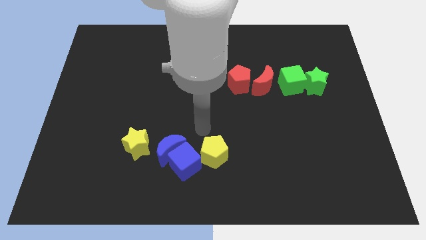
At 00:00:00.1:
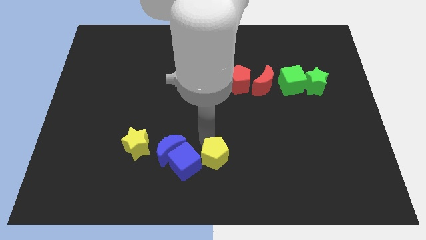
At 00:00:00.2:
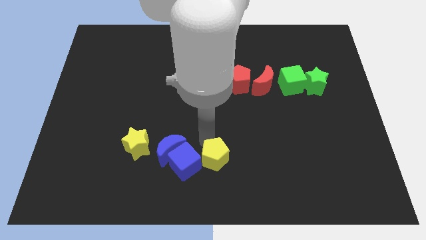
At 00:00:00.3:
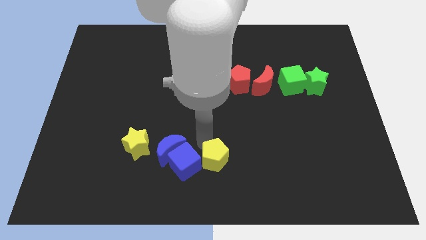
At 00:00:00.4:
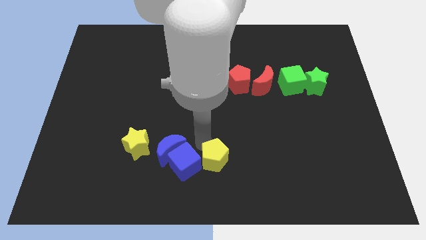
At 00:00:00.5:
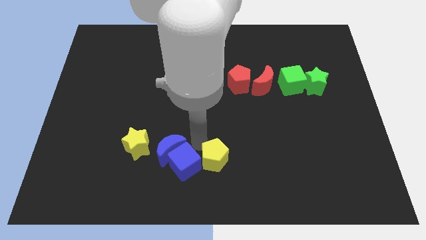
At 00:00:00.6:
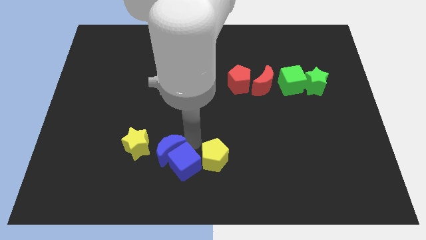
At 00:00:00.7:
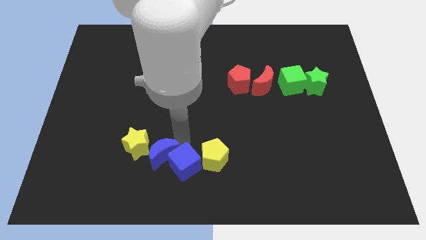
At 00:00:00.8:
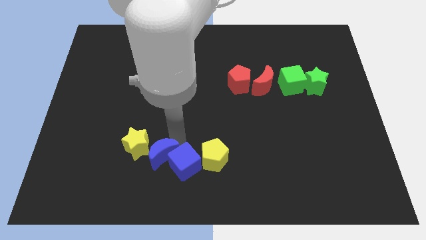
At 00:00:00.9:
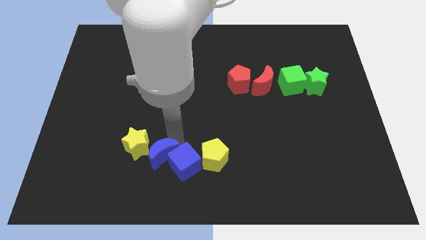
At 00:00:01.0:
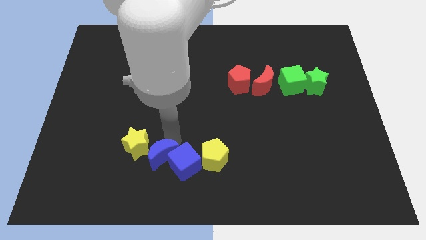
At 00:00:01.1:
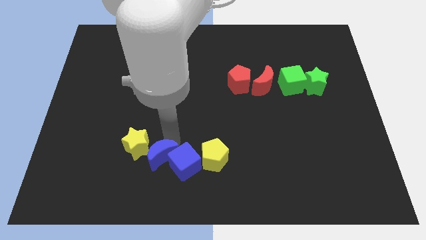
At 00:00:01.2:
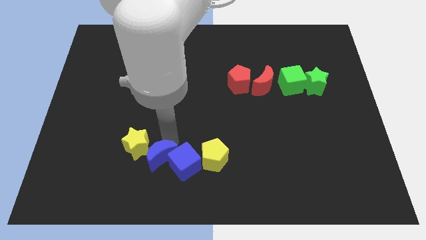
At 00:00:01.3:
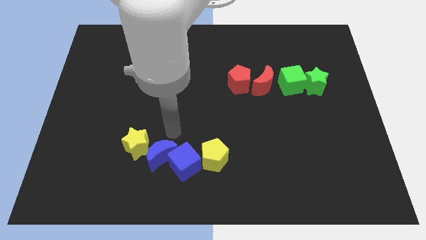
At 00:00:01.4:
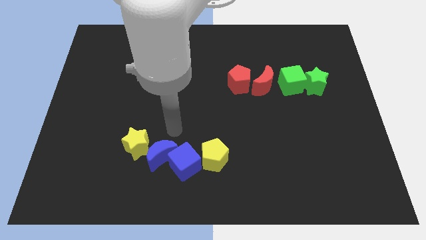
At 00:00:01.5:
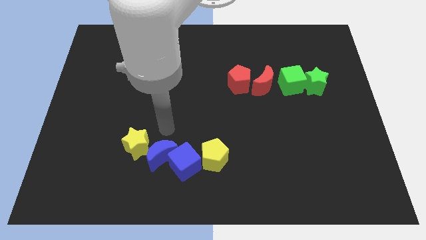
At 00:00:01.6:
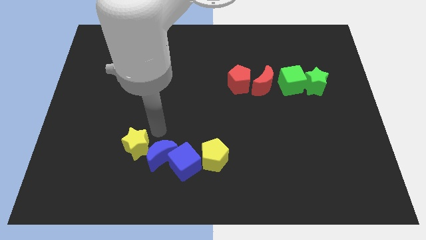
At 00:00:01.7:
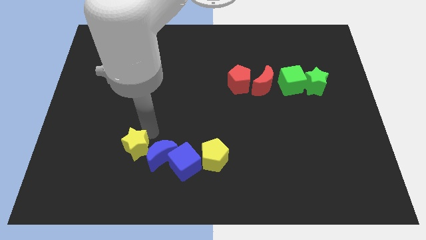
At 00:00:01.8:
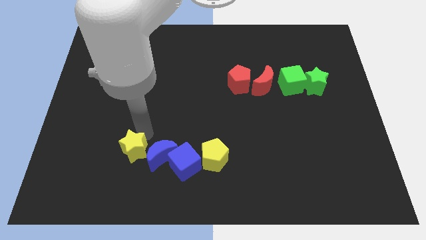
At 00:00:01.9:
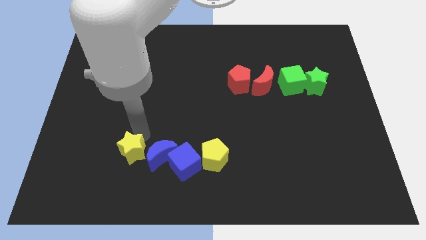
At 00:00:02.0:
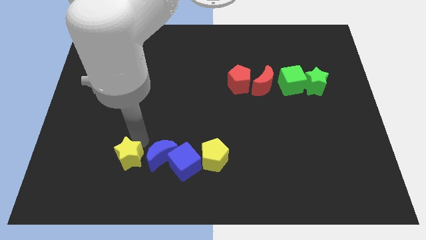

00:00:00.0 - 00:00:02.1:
arrange a group of blocks in a line

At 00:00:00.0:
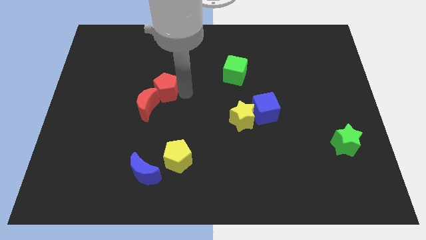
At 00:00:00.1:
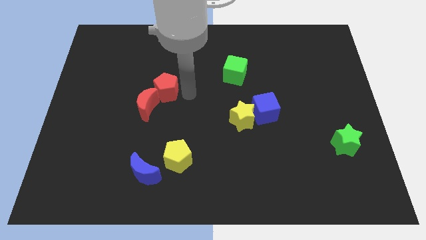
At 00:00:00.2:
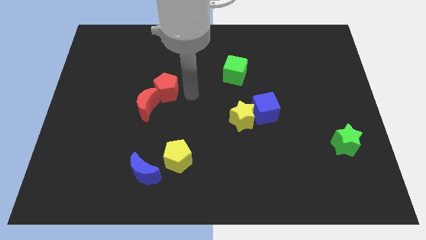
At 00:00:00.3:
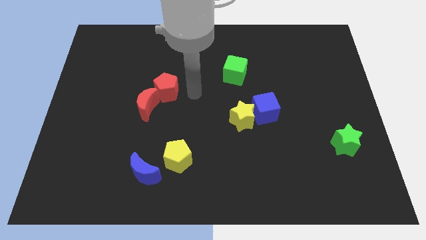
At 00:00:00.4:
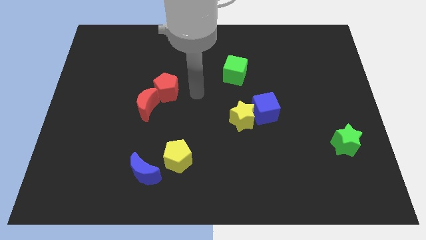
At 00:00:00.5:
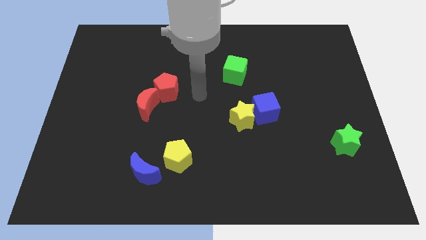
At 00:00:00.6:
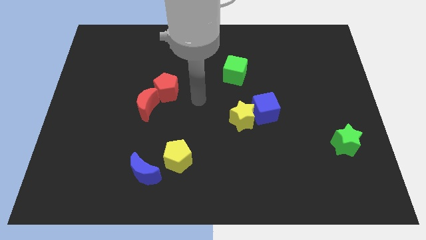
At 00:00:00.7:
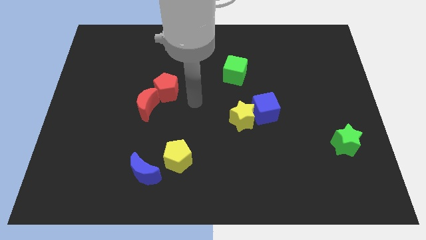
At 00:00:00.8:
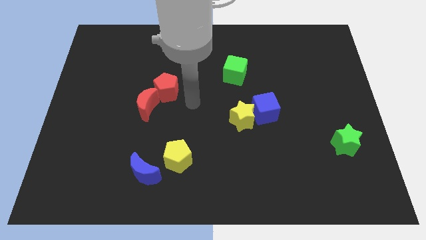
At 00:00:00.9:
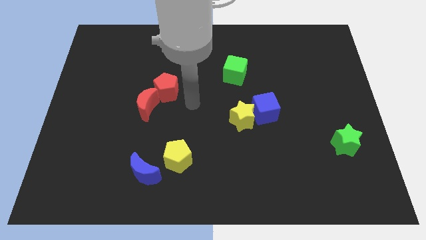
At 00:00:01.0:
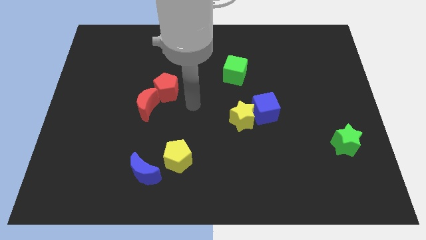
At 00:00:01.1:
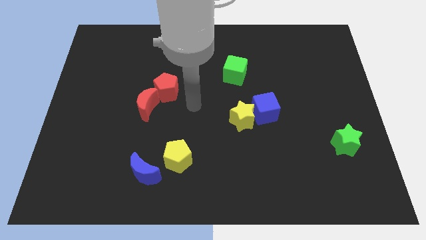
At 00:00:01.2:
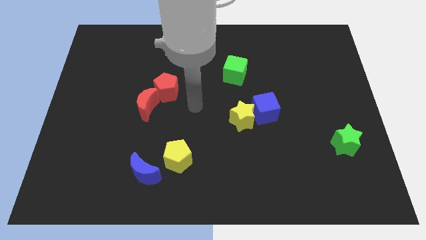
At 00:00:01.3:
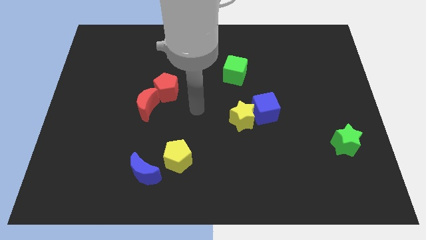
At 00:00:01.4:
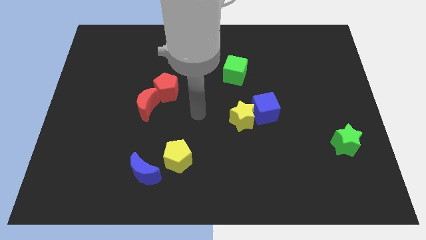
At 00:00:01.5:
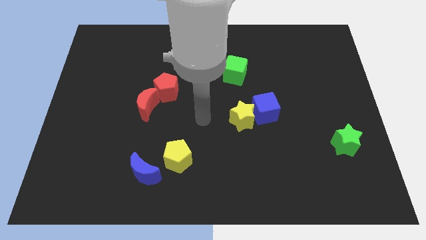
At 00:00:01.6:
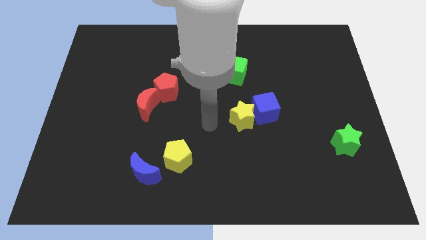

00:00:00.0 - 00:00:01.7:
move your arm towards the yellow star

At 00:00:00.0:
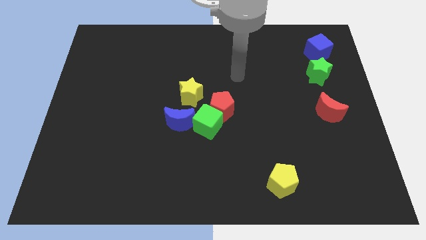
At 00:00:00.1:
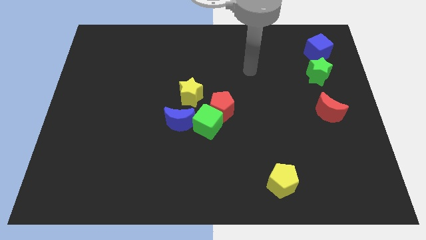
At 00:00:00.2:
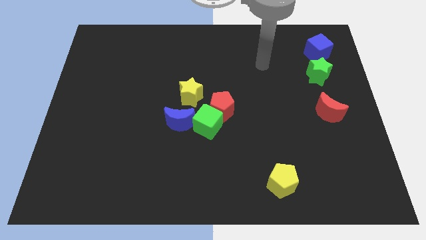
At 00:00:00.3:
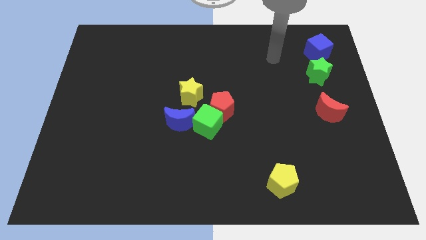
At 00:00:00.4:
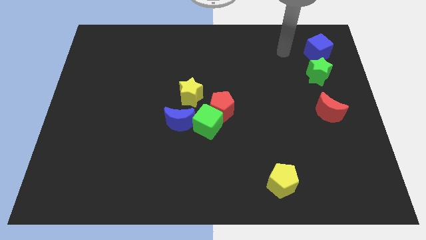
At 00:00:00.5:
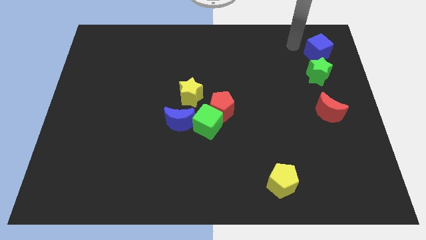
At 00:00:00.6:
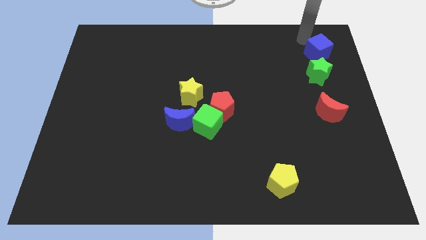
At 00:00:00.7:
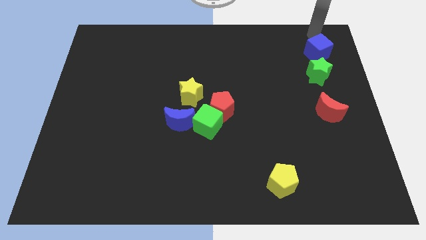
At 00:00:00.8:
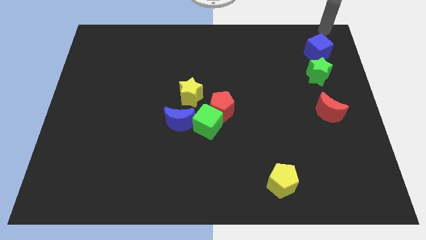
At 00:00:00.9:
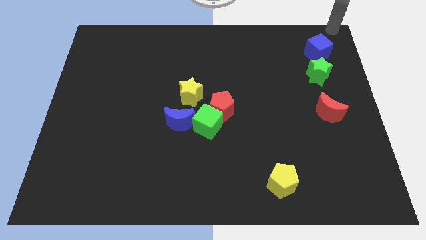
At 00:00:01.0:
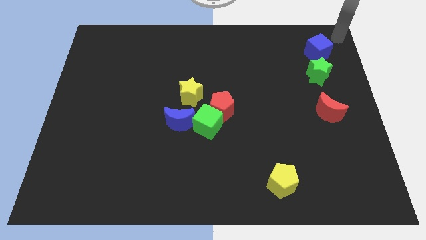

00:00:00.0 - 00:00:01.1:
put arm at top right corner

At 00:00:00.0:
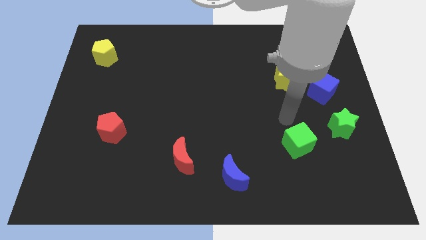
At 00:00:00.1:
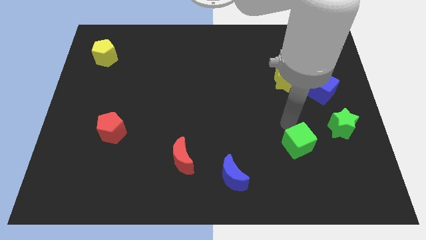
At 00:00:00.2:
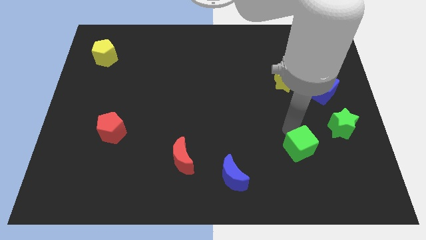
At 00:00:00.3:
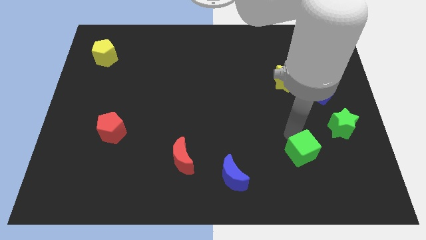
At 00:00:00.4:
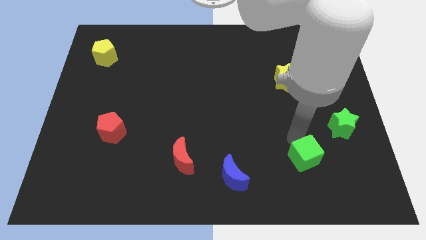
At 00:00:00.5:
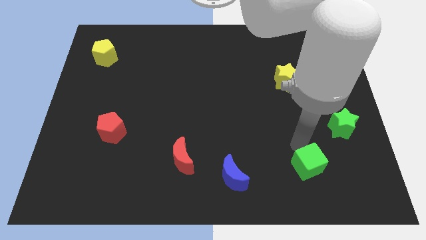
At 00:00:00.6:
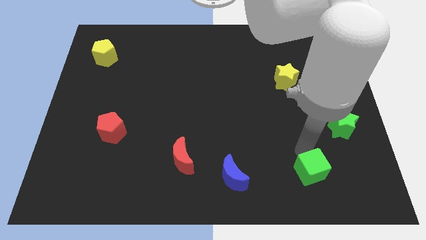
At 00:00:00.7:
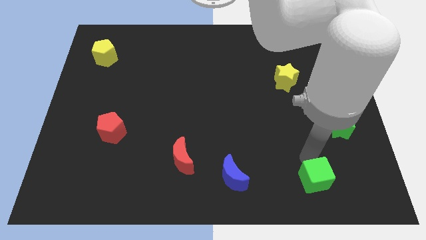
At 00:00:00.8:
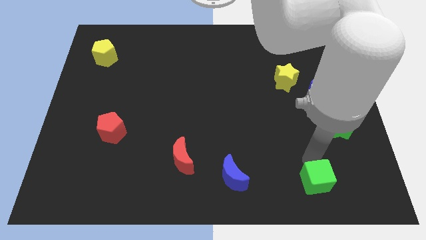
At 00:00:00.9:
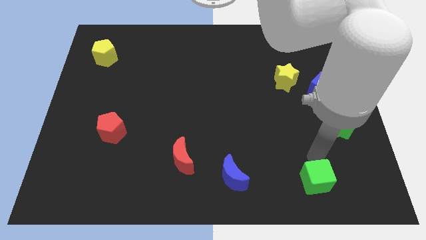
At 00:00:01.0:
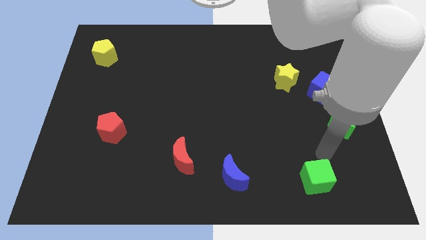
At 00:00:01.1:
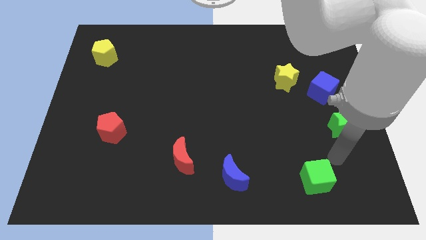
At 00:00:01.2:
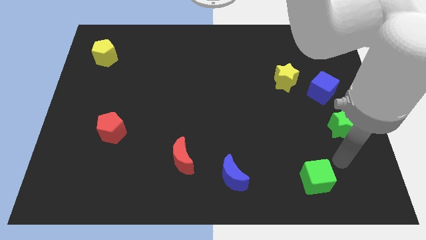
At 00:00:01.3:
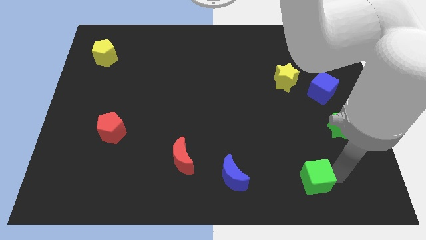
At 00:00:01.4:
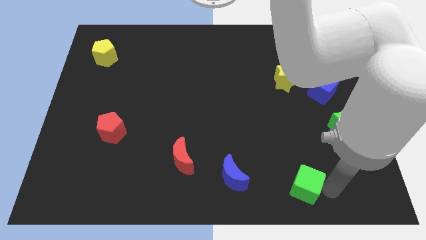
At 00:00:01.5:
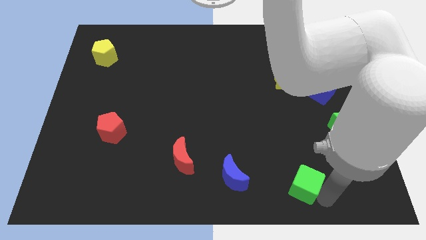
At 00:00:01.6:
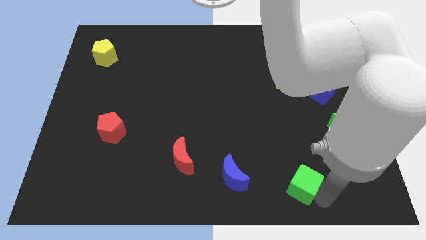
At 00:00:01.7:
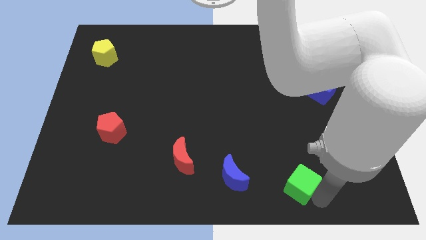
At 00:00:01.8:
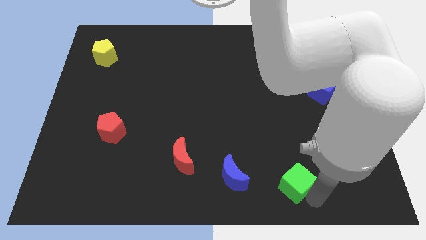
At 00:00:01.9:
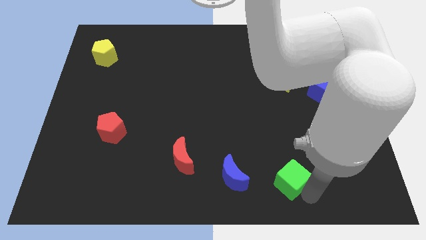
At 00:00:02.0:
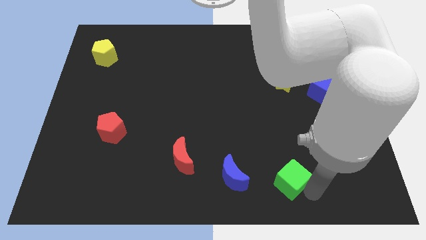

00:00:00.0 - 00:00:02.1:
push green cube to the right of blue moon

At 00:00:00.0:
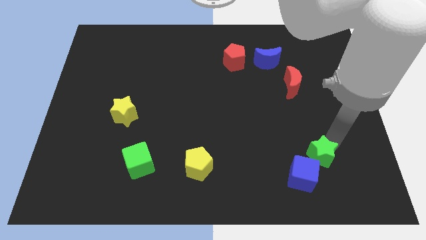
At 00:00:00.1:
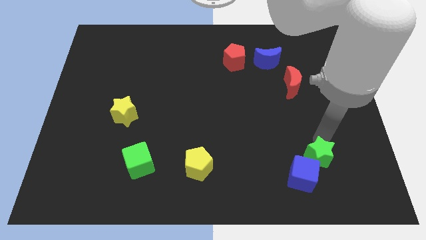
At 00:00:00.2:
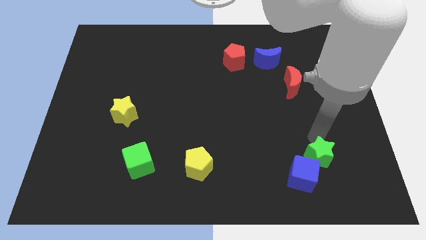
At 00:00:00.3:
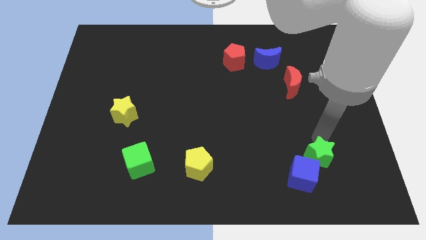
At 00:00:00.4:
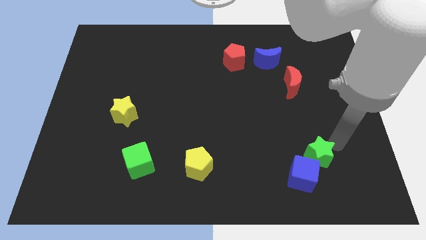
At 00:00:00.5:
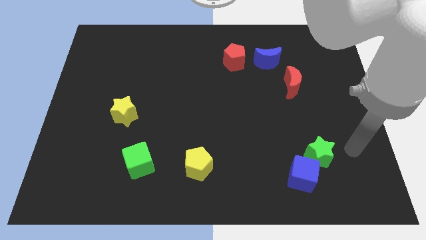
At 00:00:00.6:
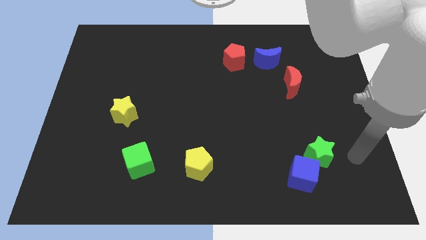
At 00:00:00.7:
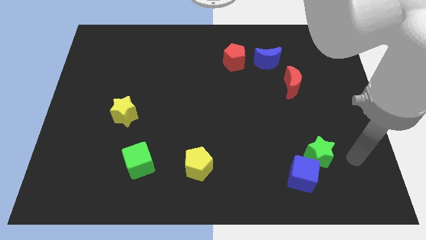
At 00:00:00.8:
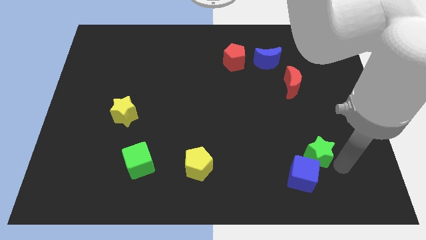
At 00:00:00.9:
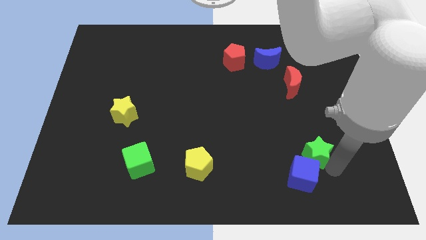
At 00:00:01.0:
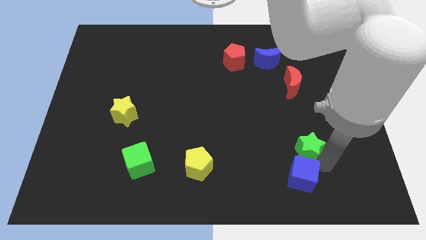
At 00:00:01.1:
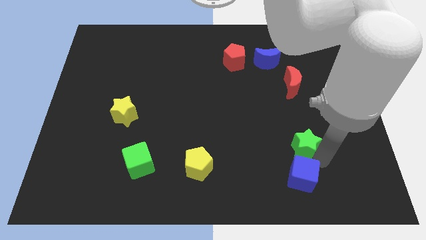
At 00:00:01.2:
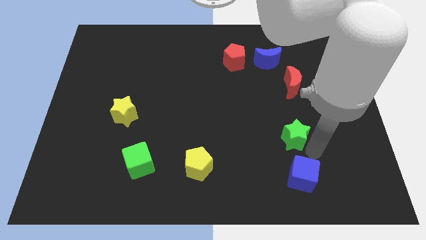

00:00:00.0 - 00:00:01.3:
move green star above the blue moon

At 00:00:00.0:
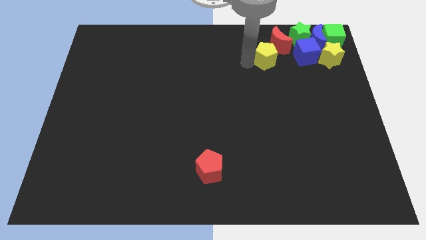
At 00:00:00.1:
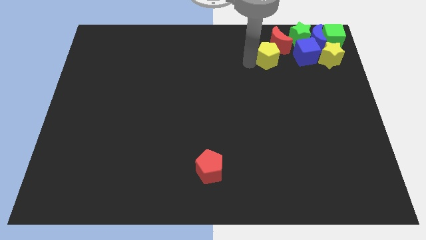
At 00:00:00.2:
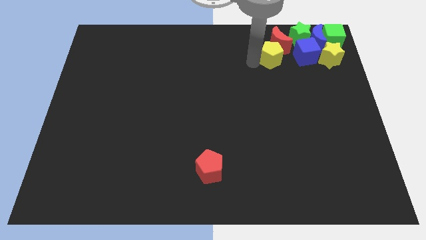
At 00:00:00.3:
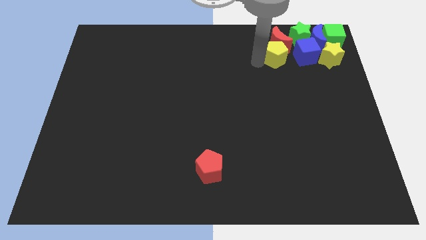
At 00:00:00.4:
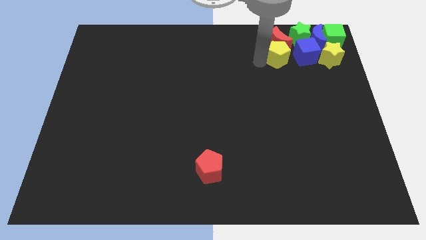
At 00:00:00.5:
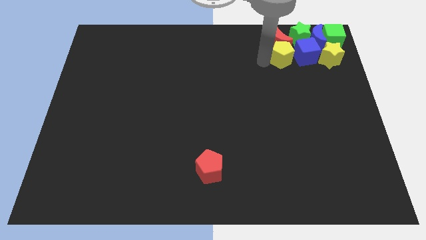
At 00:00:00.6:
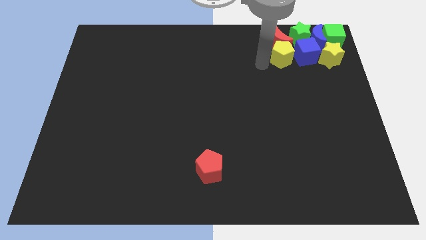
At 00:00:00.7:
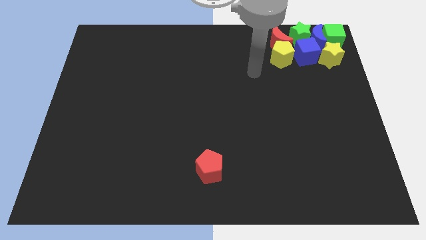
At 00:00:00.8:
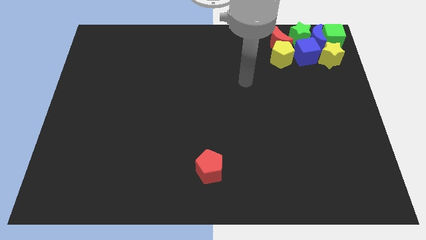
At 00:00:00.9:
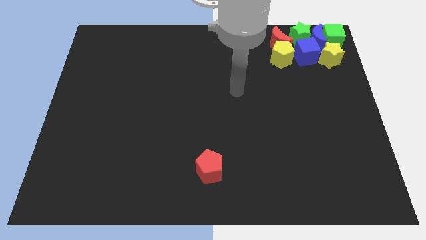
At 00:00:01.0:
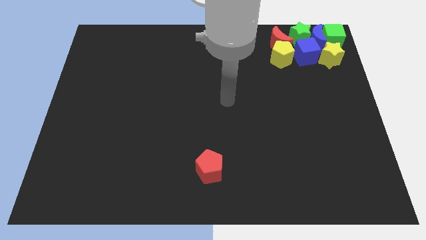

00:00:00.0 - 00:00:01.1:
place the yellow pentagon below the red moon
